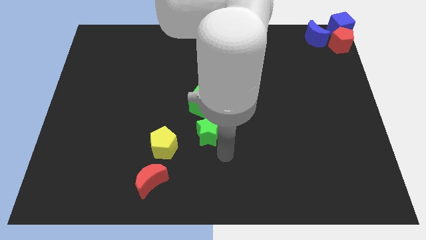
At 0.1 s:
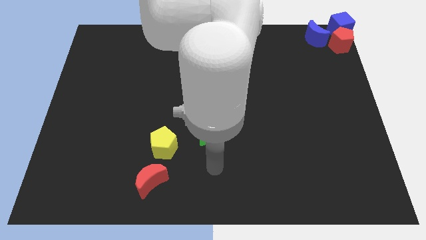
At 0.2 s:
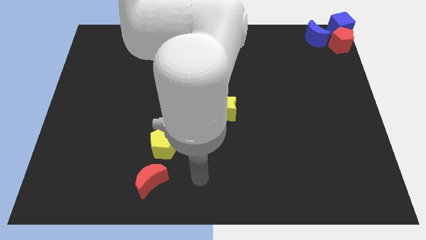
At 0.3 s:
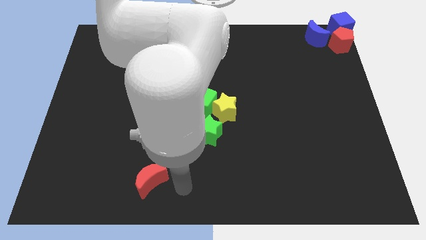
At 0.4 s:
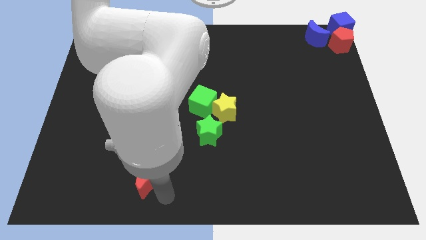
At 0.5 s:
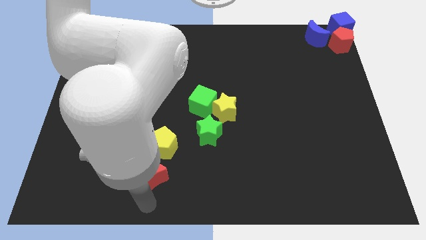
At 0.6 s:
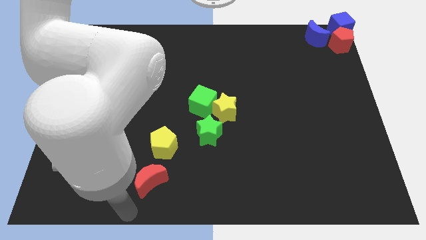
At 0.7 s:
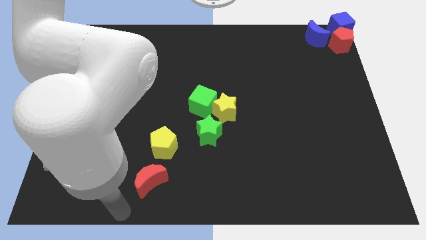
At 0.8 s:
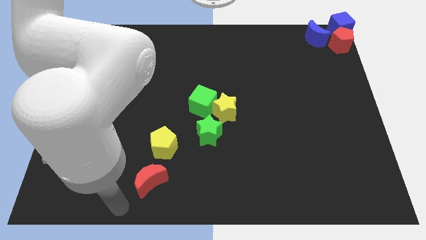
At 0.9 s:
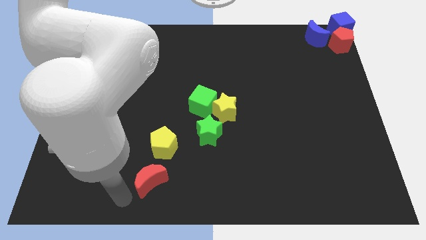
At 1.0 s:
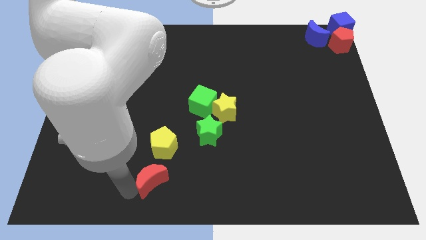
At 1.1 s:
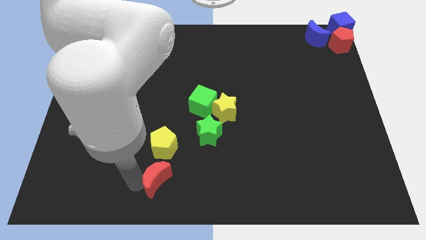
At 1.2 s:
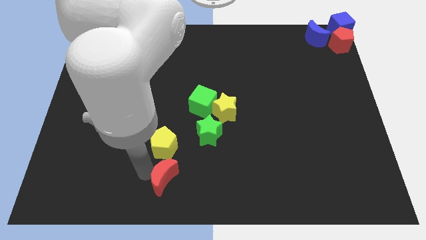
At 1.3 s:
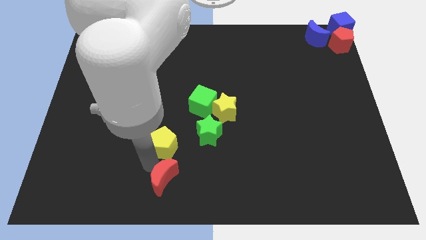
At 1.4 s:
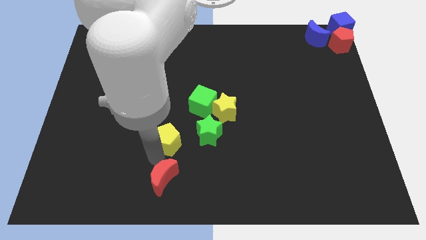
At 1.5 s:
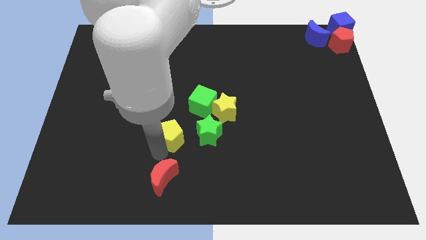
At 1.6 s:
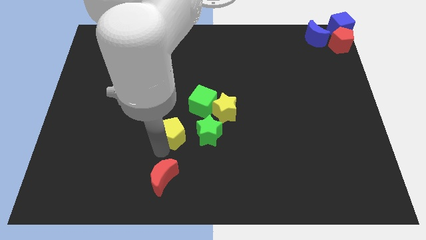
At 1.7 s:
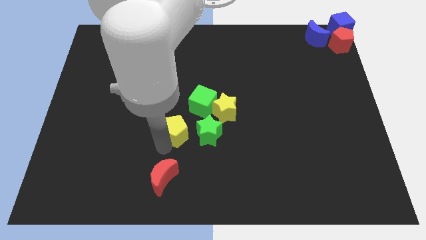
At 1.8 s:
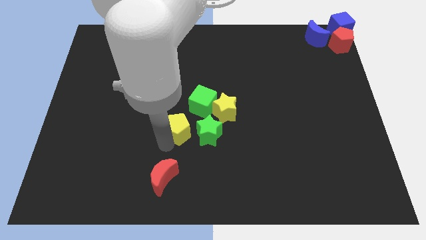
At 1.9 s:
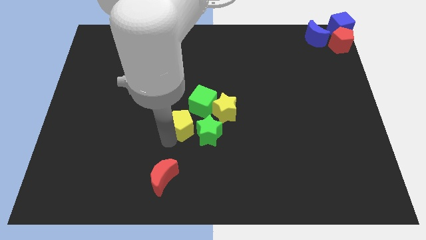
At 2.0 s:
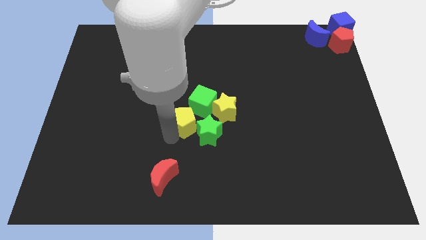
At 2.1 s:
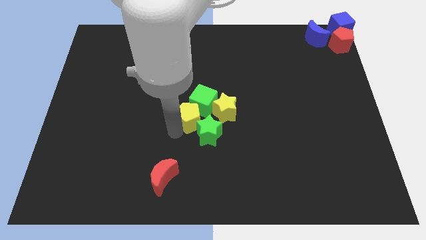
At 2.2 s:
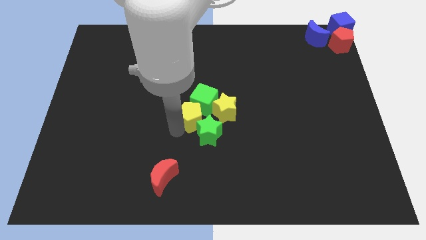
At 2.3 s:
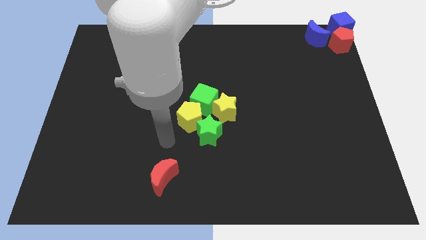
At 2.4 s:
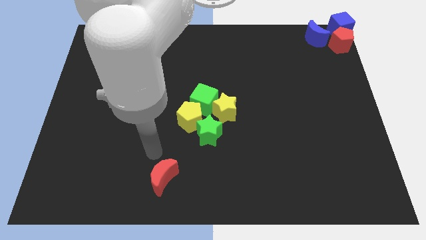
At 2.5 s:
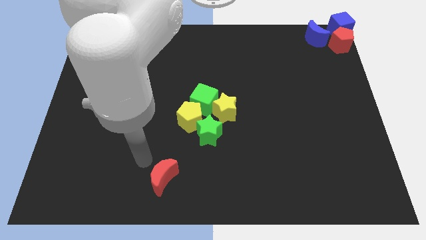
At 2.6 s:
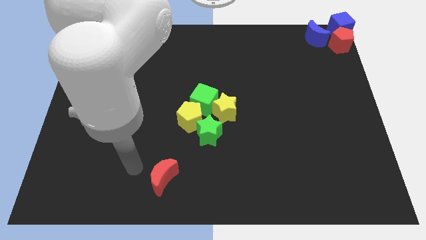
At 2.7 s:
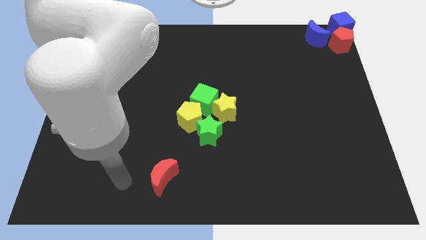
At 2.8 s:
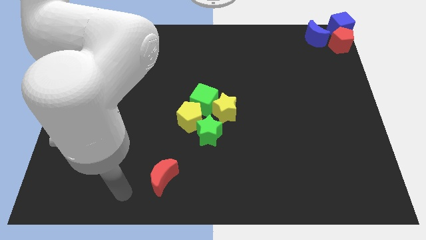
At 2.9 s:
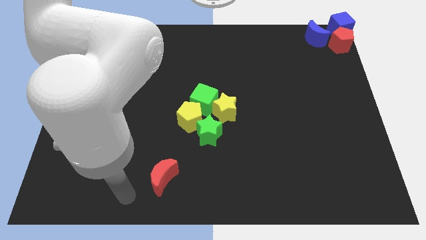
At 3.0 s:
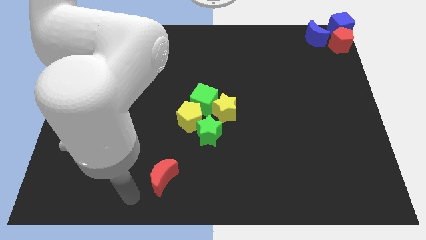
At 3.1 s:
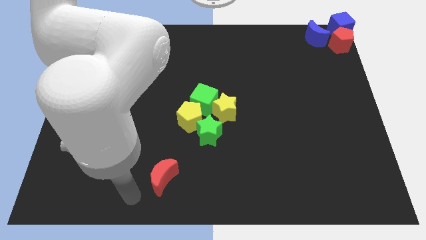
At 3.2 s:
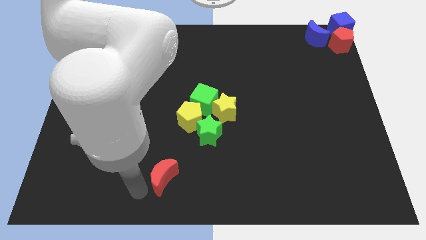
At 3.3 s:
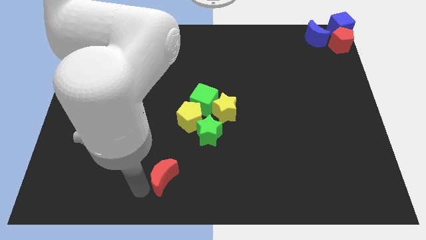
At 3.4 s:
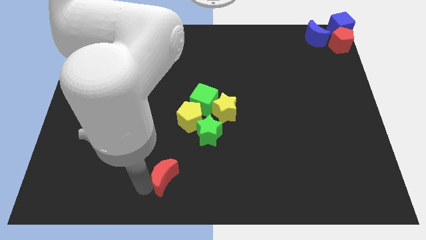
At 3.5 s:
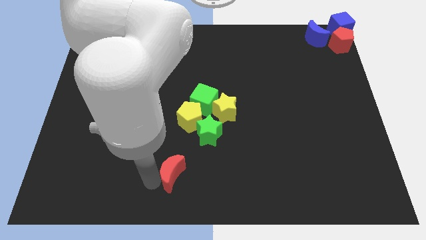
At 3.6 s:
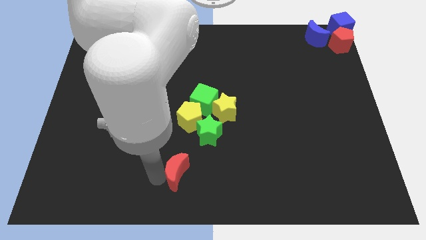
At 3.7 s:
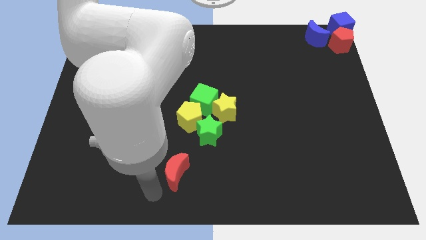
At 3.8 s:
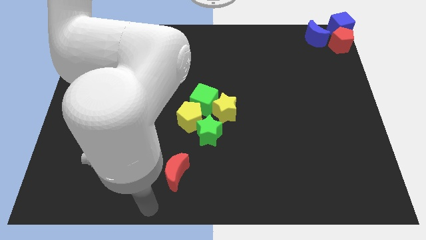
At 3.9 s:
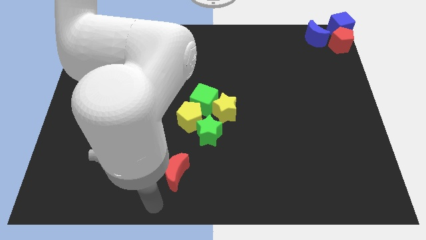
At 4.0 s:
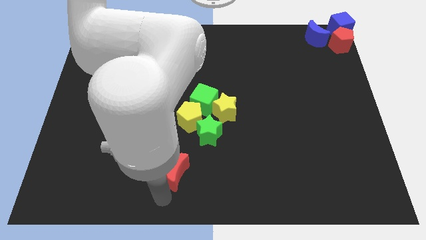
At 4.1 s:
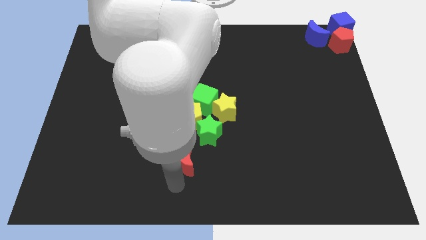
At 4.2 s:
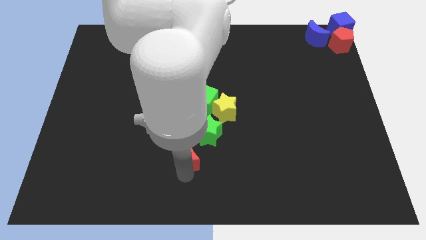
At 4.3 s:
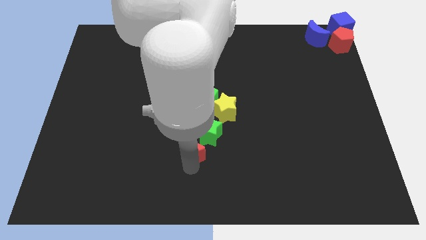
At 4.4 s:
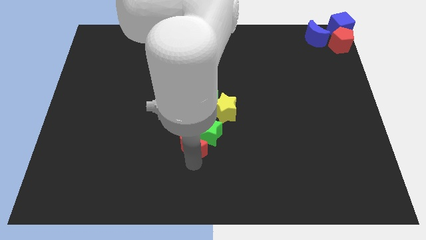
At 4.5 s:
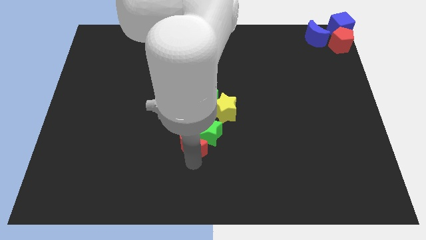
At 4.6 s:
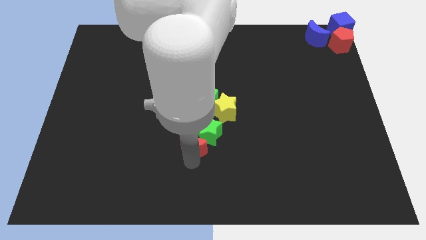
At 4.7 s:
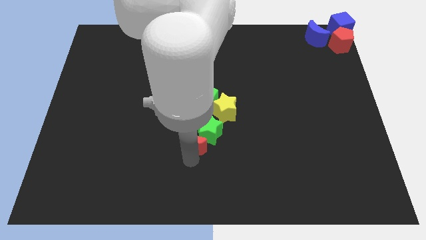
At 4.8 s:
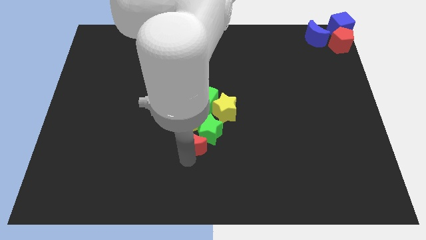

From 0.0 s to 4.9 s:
move the yellow pentagon and the red crescent to the group of blocks

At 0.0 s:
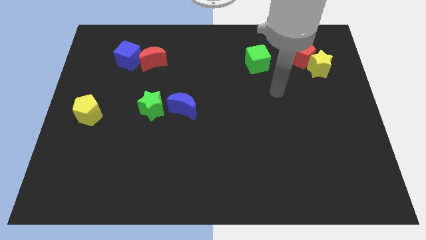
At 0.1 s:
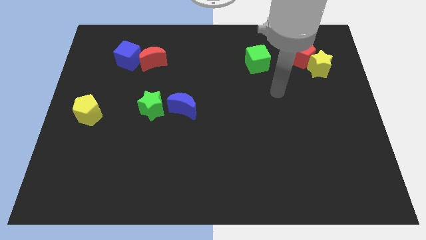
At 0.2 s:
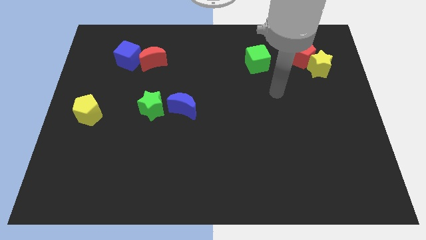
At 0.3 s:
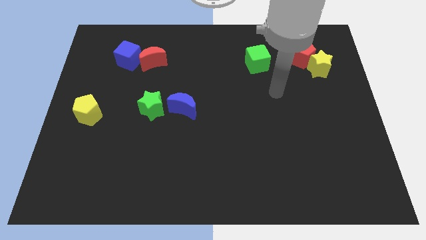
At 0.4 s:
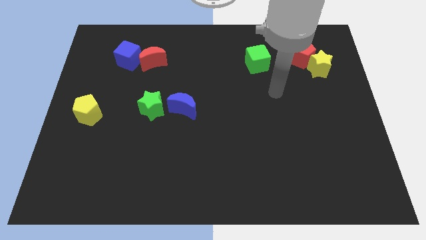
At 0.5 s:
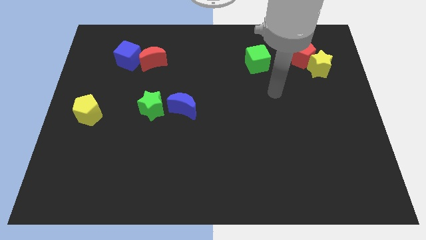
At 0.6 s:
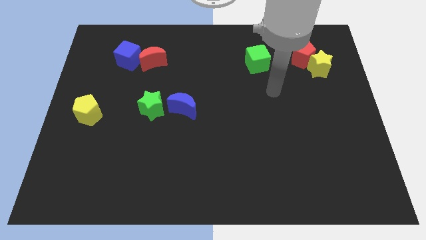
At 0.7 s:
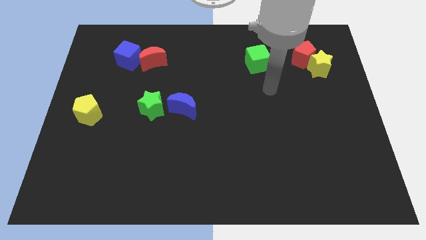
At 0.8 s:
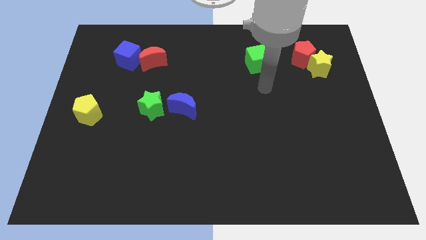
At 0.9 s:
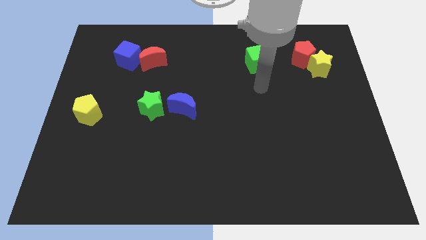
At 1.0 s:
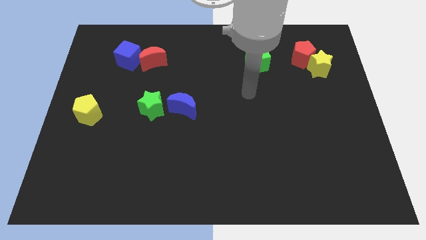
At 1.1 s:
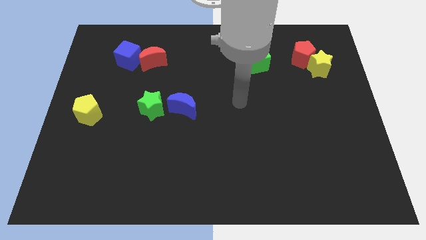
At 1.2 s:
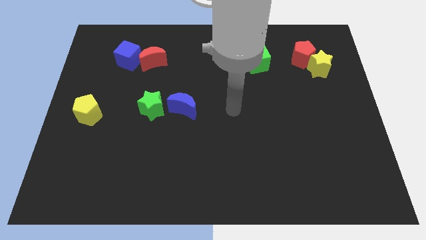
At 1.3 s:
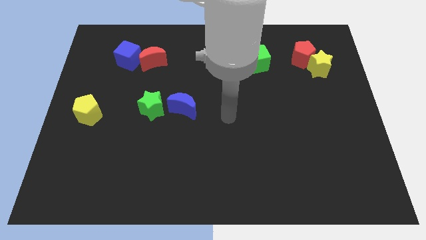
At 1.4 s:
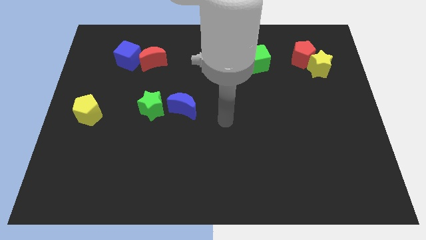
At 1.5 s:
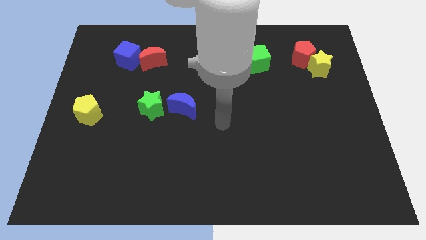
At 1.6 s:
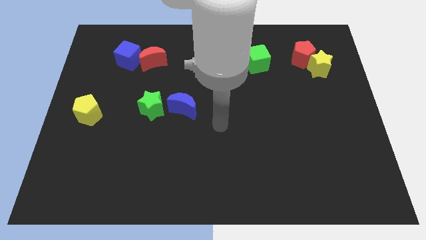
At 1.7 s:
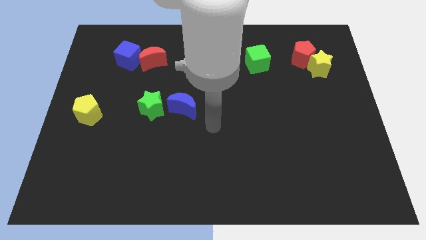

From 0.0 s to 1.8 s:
put your hand diagonally bottom left to the green cube

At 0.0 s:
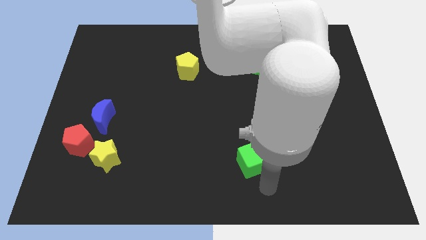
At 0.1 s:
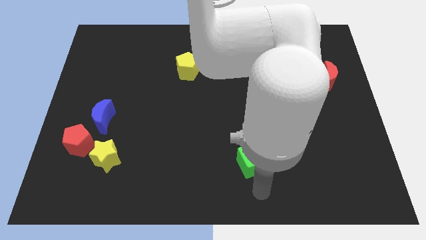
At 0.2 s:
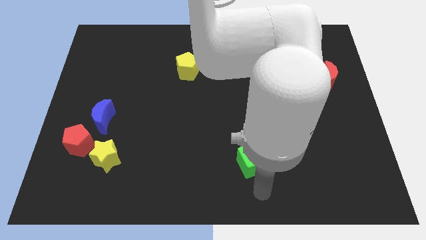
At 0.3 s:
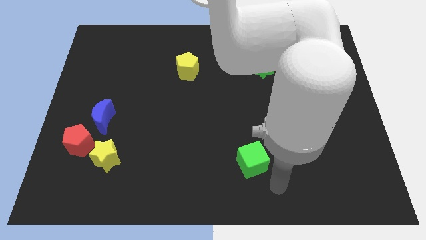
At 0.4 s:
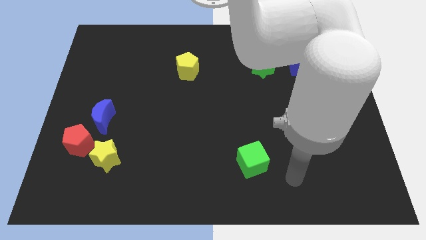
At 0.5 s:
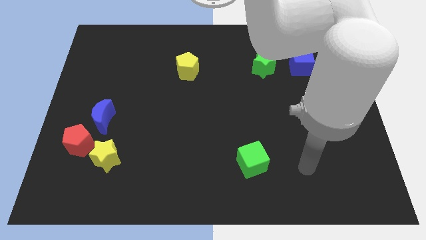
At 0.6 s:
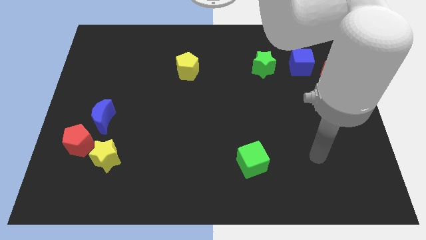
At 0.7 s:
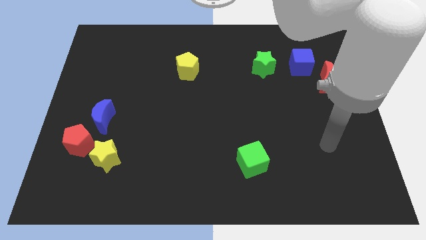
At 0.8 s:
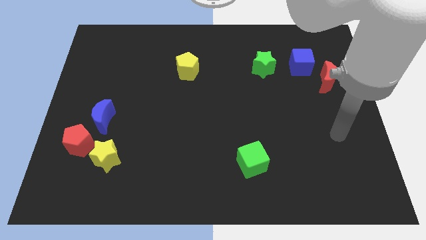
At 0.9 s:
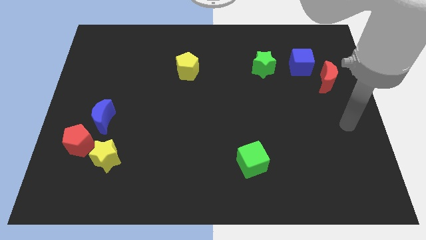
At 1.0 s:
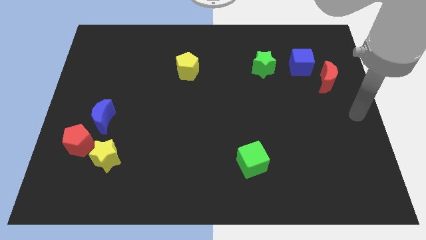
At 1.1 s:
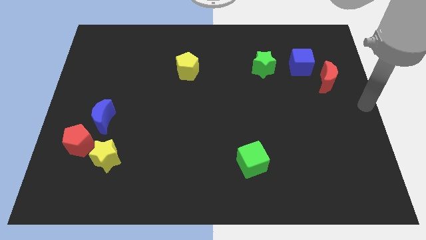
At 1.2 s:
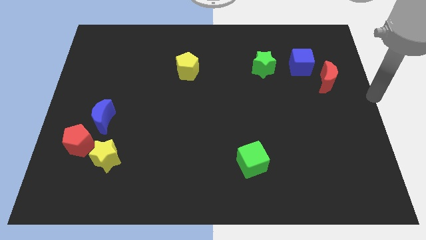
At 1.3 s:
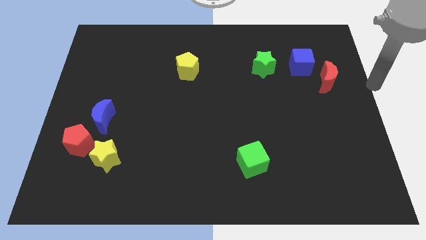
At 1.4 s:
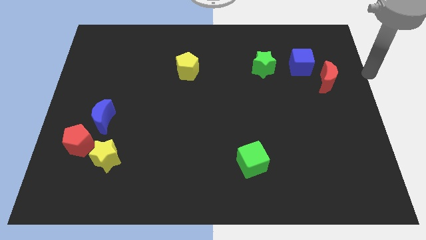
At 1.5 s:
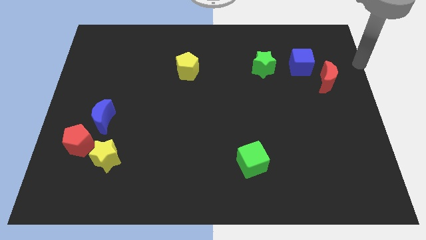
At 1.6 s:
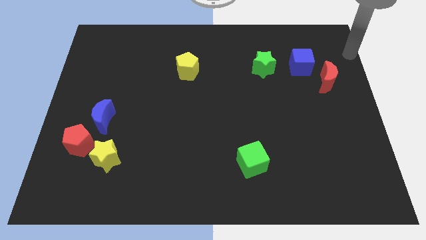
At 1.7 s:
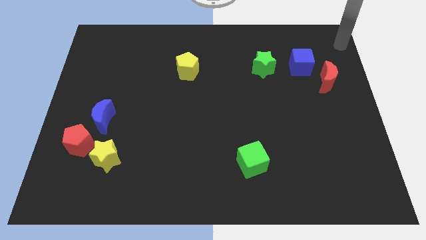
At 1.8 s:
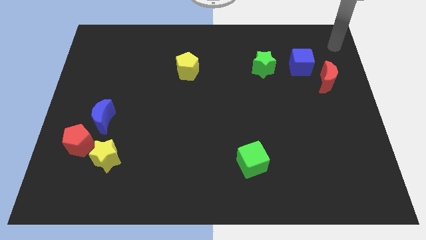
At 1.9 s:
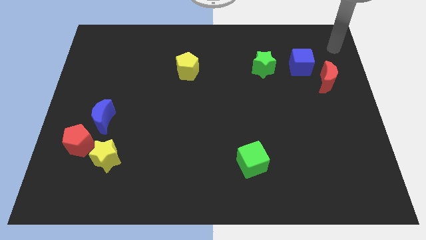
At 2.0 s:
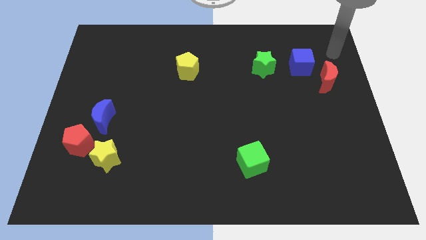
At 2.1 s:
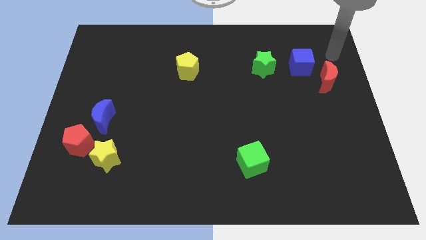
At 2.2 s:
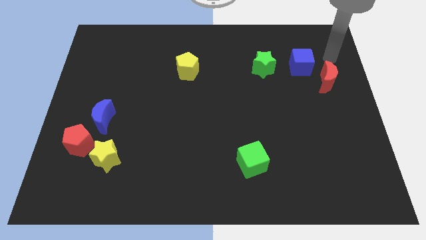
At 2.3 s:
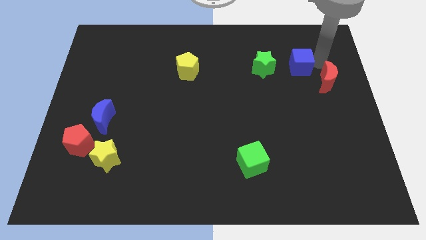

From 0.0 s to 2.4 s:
move your arm above red moon
